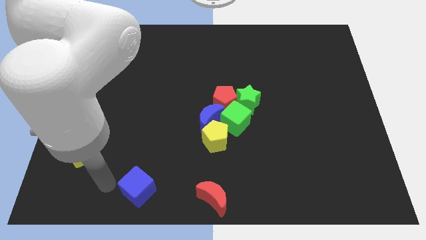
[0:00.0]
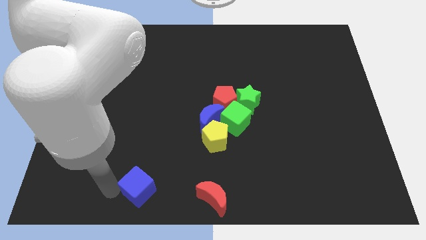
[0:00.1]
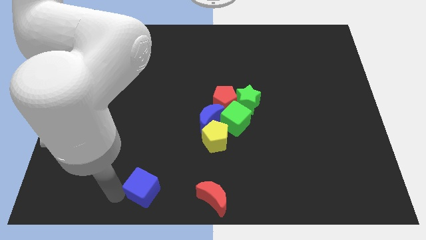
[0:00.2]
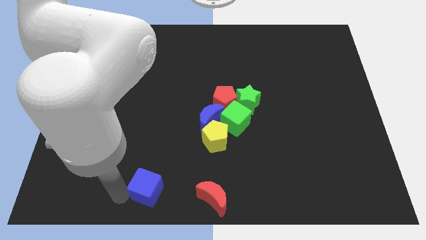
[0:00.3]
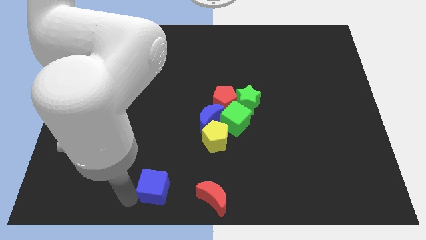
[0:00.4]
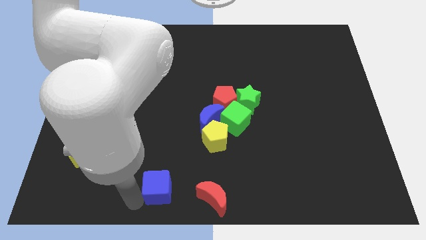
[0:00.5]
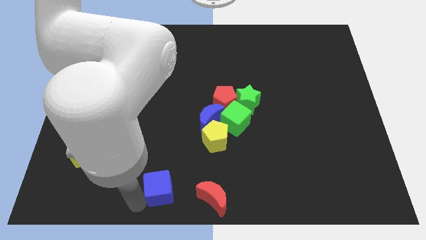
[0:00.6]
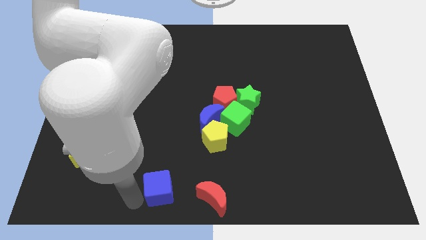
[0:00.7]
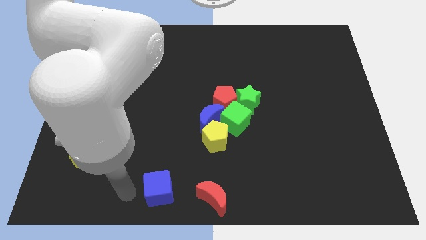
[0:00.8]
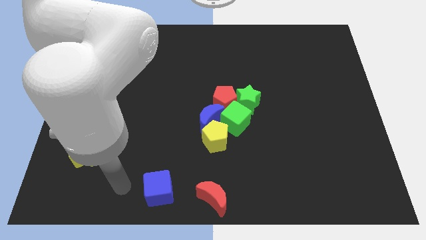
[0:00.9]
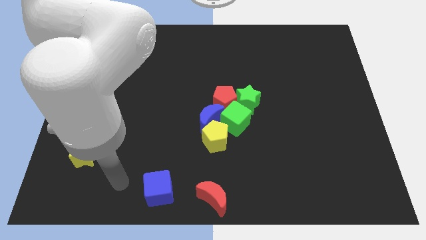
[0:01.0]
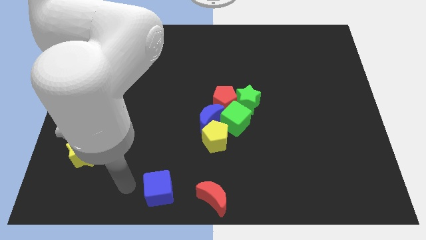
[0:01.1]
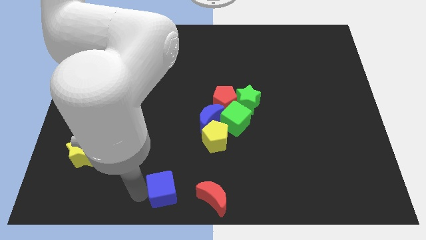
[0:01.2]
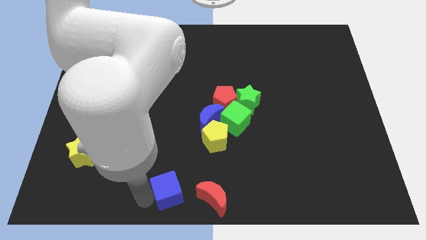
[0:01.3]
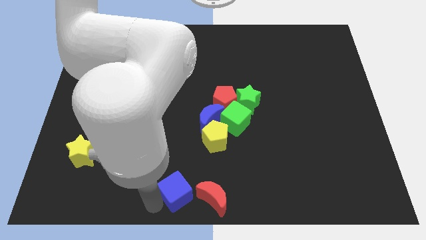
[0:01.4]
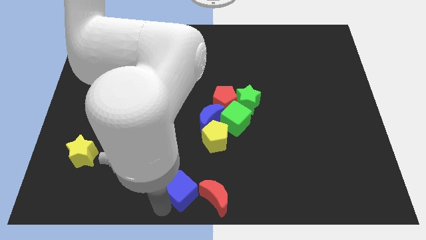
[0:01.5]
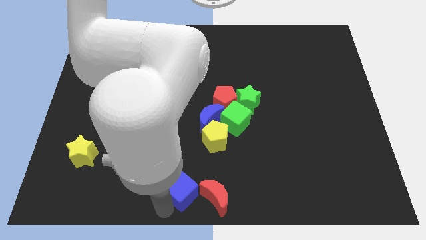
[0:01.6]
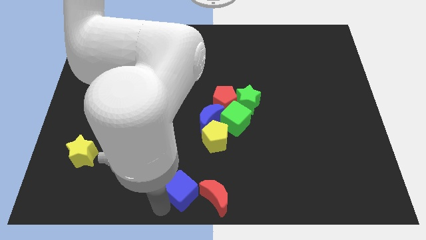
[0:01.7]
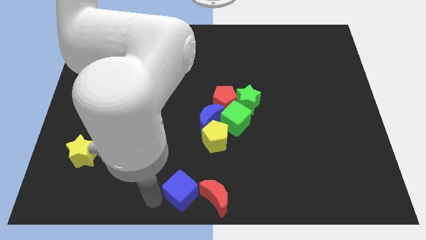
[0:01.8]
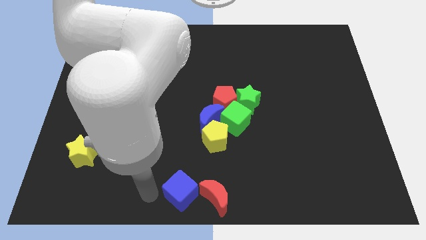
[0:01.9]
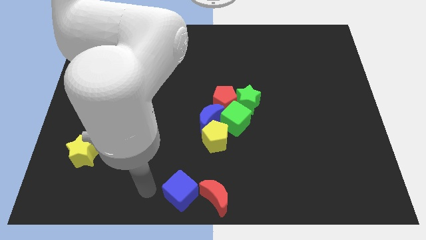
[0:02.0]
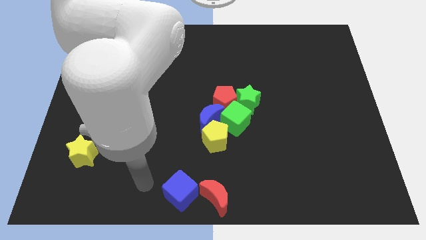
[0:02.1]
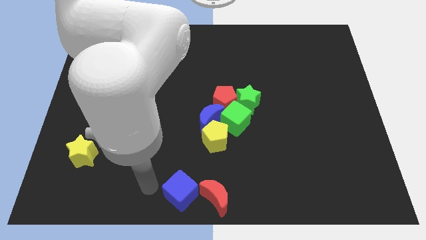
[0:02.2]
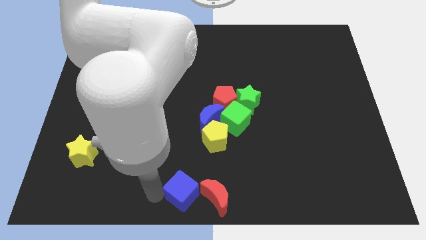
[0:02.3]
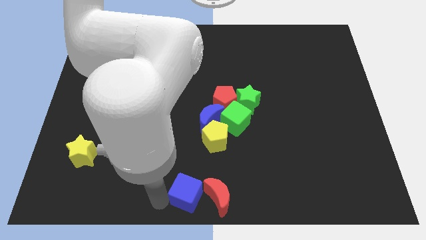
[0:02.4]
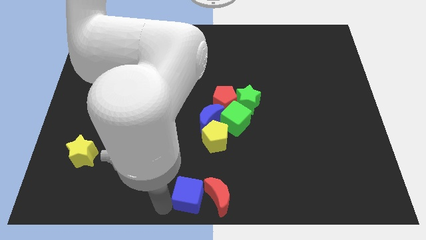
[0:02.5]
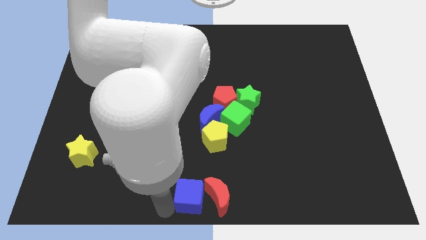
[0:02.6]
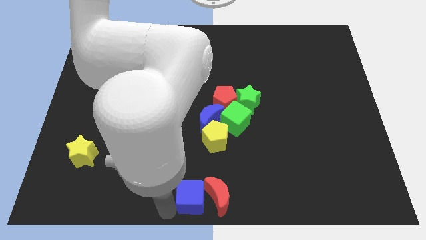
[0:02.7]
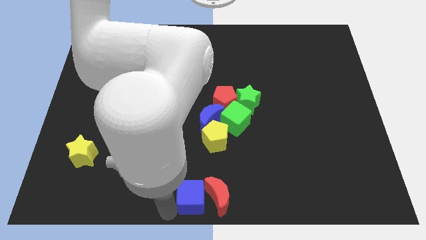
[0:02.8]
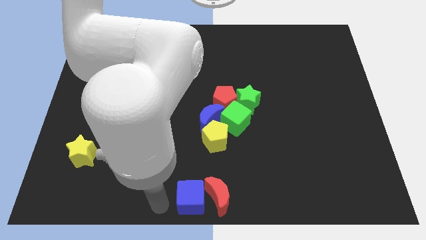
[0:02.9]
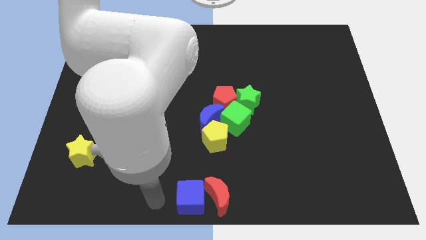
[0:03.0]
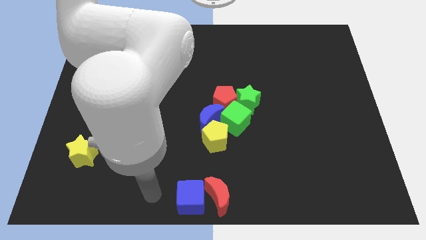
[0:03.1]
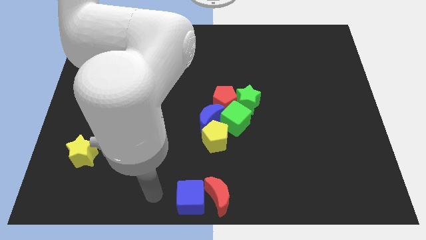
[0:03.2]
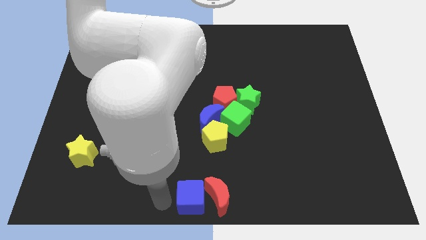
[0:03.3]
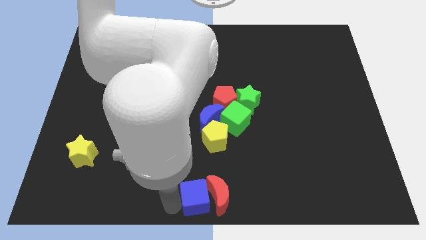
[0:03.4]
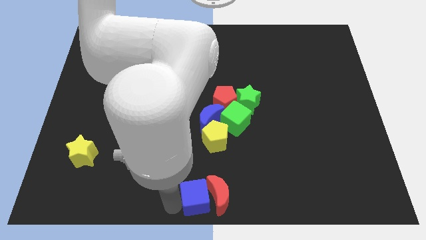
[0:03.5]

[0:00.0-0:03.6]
push the blue cube into the red moon

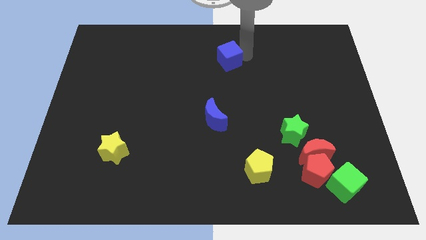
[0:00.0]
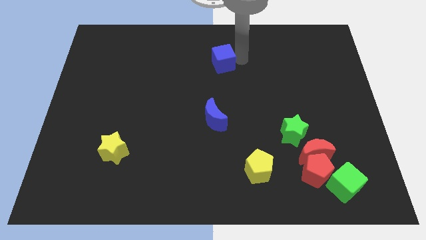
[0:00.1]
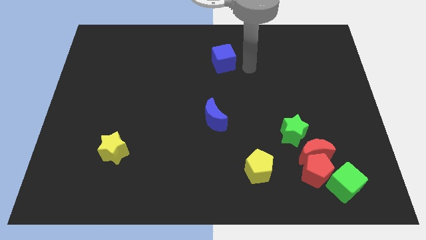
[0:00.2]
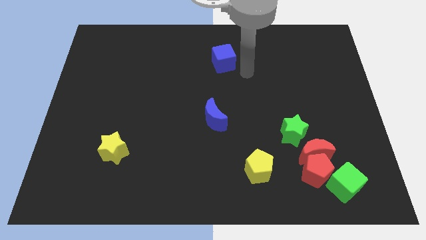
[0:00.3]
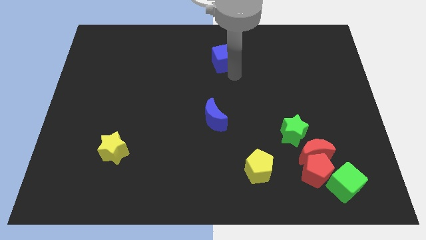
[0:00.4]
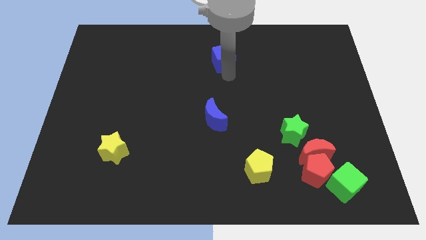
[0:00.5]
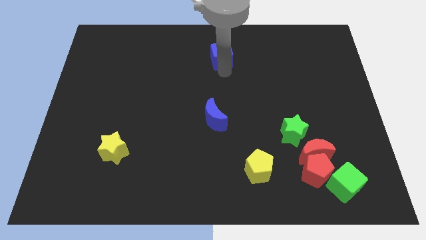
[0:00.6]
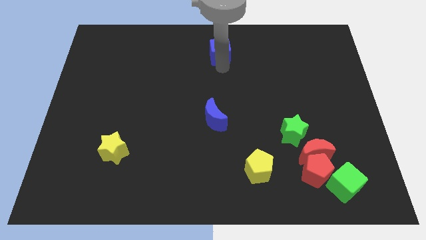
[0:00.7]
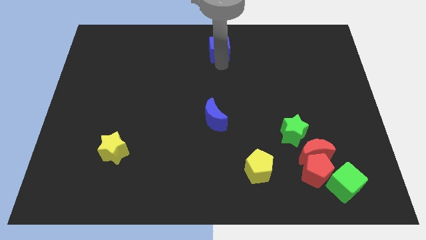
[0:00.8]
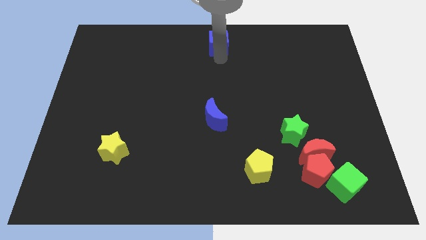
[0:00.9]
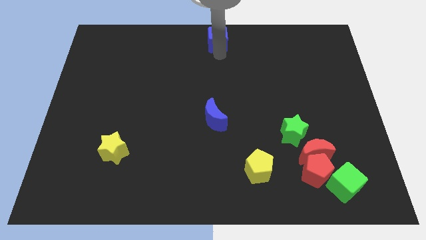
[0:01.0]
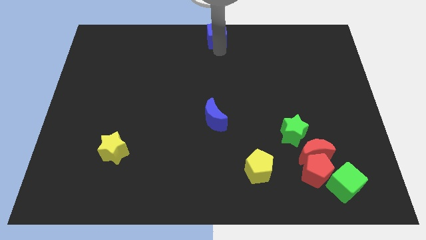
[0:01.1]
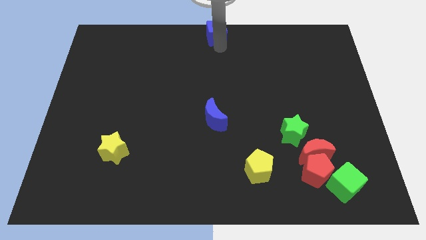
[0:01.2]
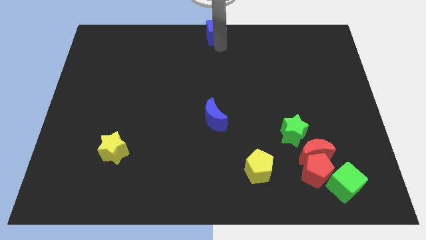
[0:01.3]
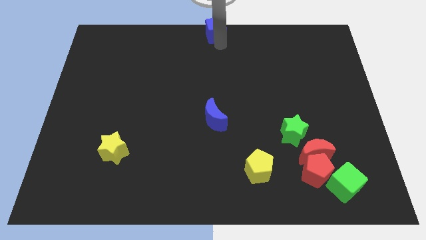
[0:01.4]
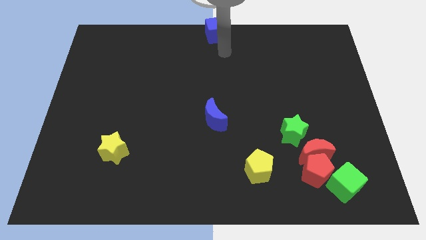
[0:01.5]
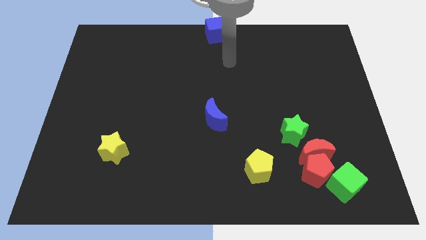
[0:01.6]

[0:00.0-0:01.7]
place the blue cube to the top center of the board

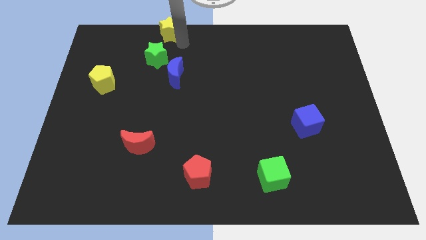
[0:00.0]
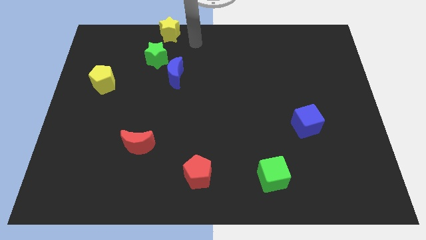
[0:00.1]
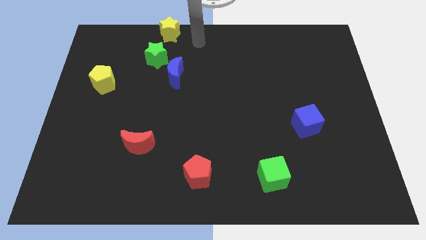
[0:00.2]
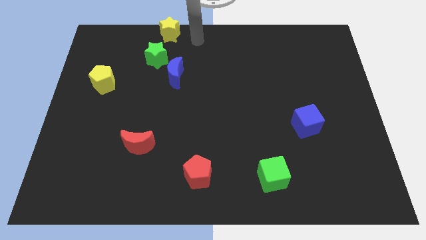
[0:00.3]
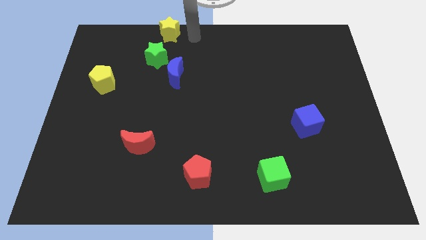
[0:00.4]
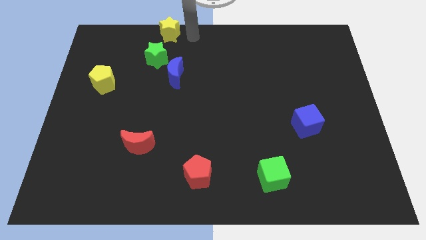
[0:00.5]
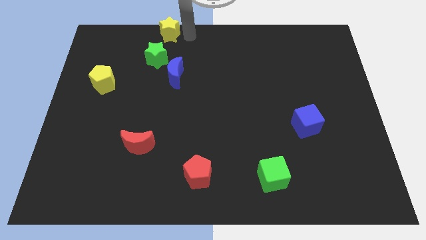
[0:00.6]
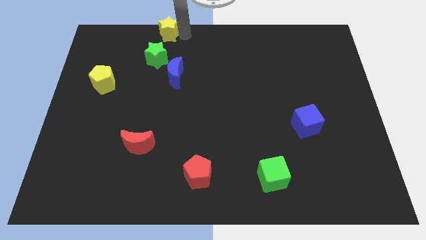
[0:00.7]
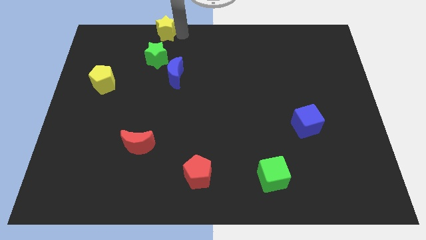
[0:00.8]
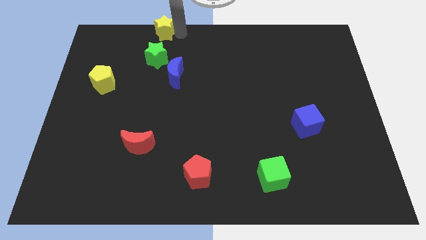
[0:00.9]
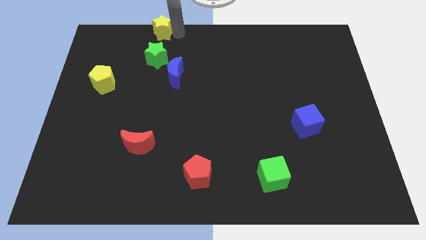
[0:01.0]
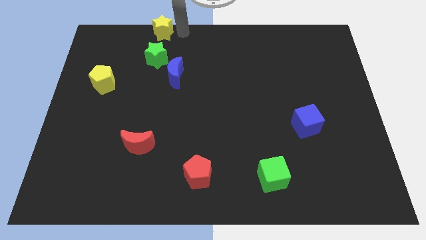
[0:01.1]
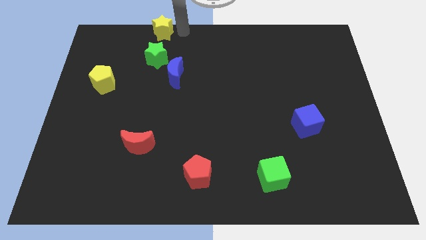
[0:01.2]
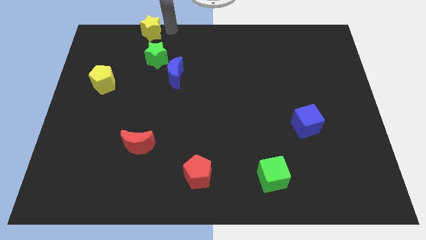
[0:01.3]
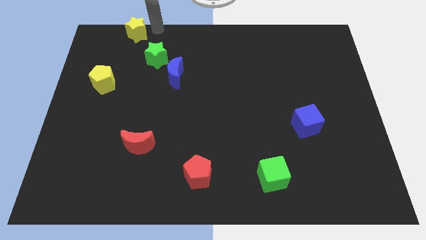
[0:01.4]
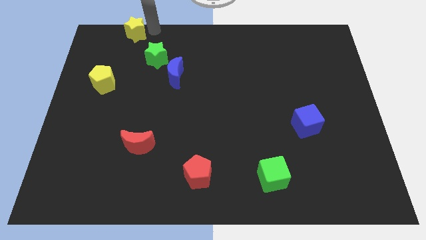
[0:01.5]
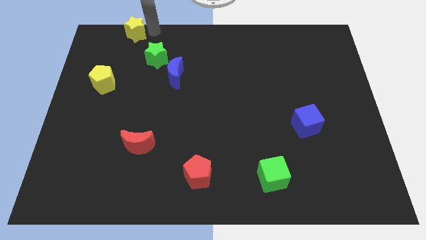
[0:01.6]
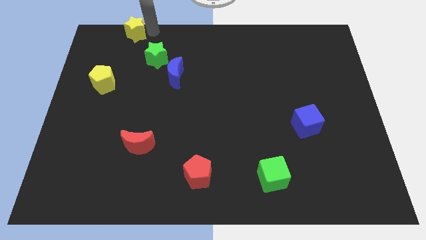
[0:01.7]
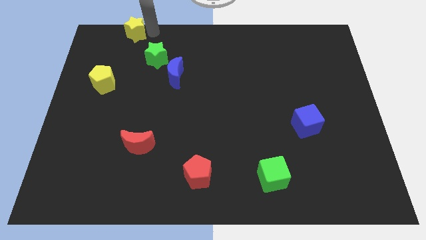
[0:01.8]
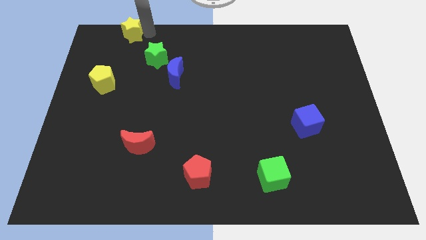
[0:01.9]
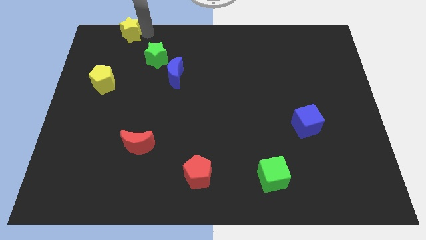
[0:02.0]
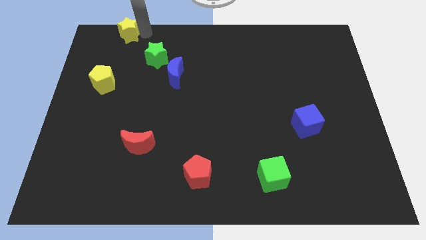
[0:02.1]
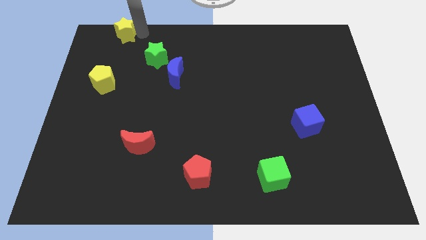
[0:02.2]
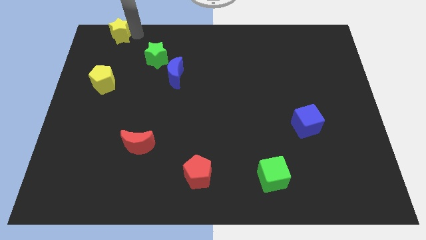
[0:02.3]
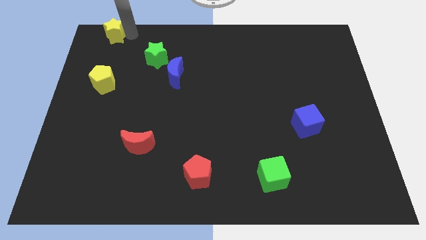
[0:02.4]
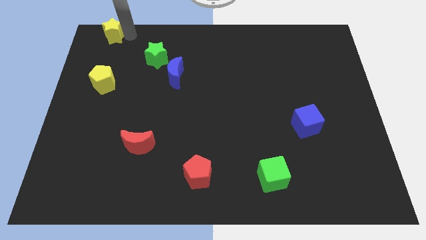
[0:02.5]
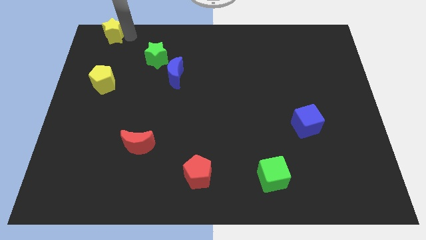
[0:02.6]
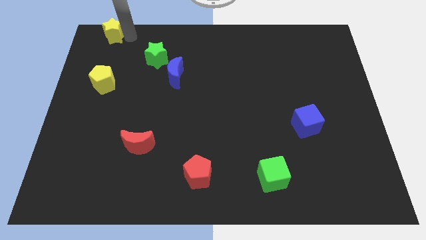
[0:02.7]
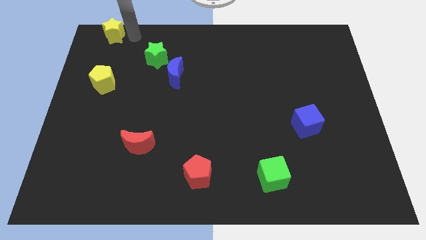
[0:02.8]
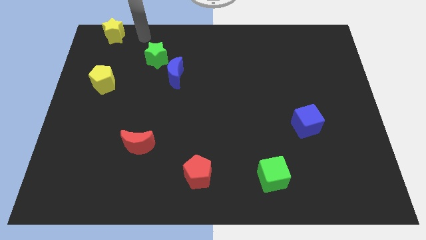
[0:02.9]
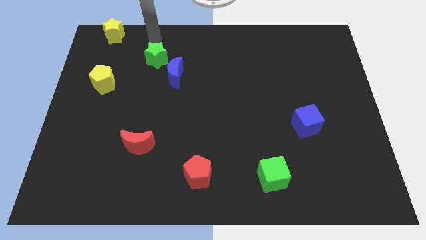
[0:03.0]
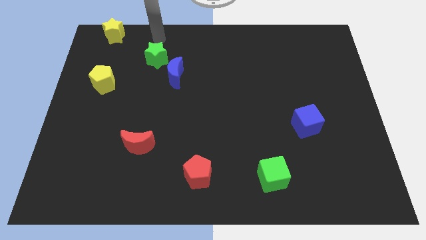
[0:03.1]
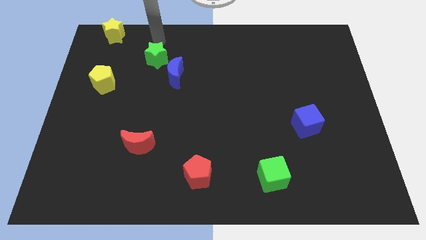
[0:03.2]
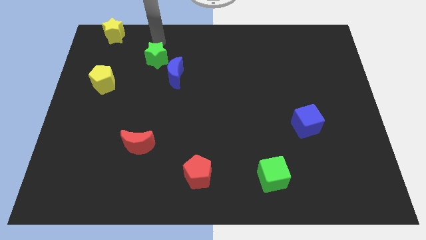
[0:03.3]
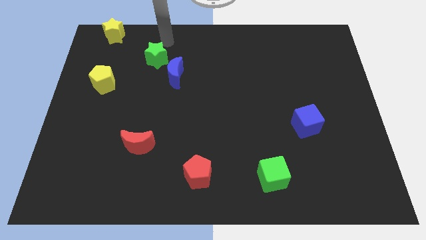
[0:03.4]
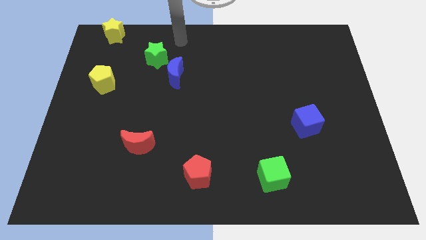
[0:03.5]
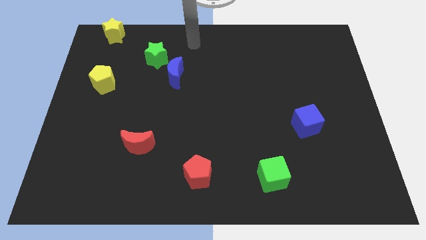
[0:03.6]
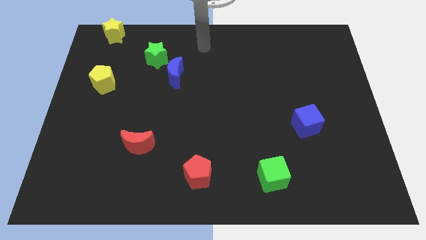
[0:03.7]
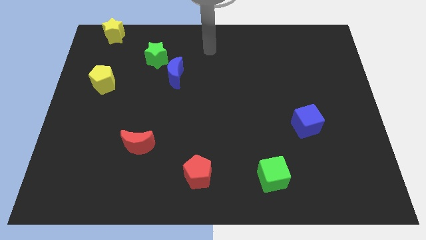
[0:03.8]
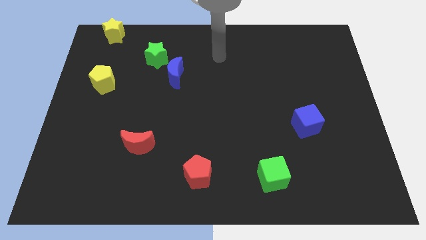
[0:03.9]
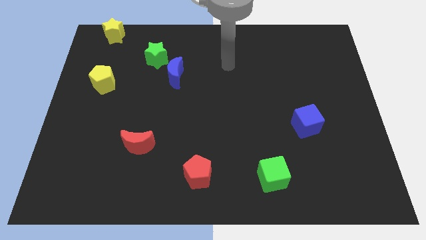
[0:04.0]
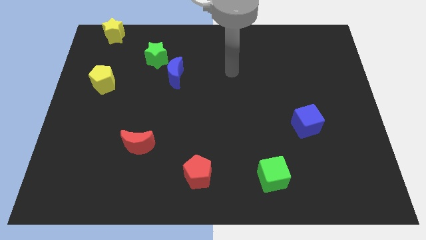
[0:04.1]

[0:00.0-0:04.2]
place the yellow star vertically above the yellow pentagon
